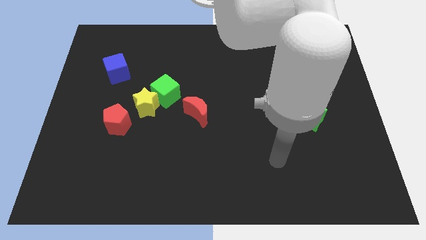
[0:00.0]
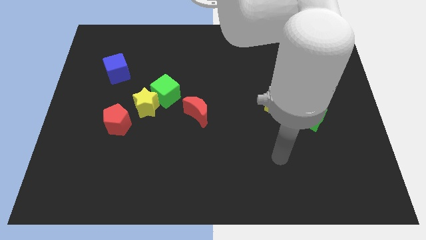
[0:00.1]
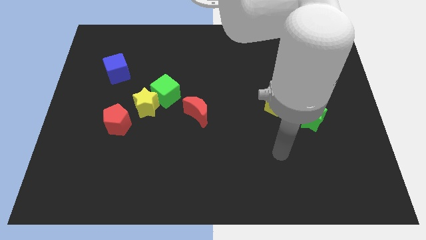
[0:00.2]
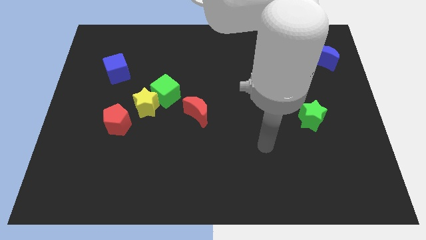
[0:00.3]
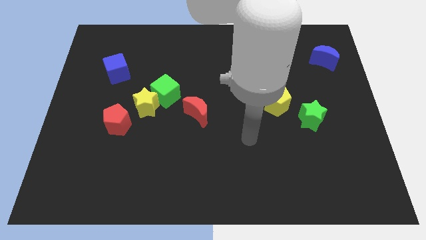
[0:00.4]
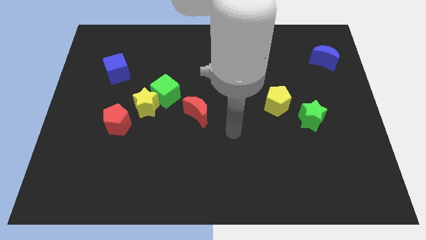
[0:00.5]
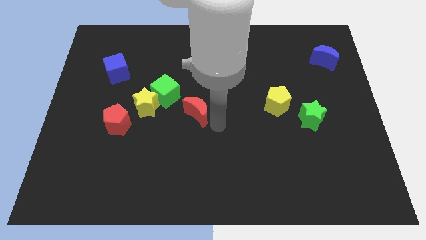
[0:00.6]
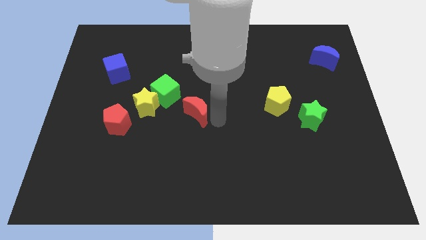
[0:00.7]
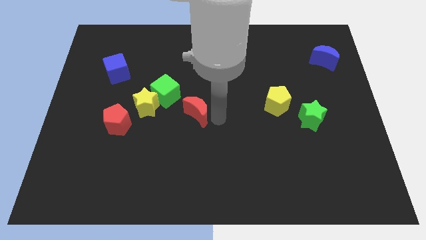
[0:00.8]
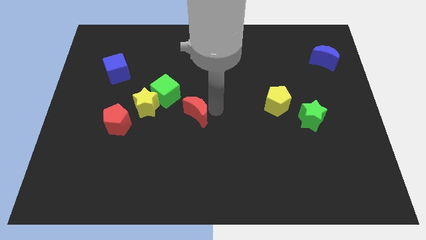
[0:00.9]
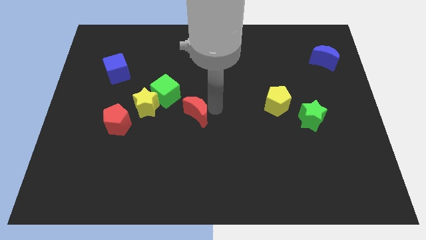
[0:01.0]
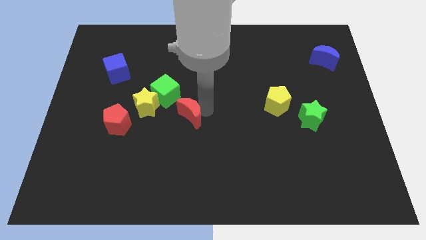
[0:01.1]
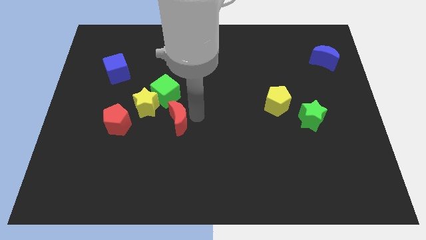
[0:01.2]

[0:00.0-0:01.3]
go and touch the red crescent

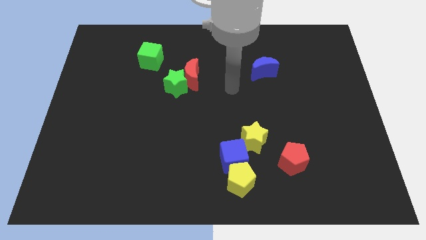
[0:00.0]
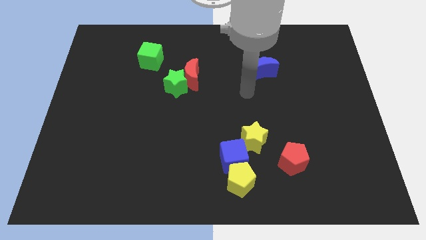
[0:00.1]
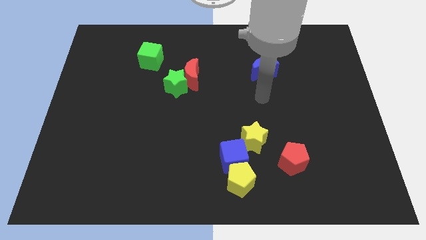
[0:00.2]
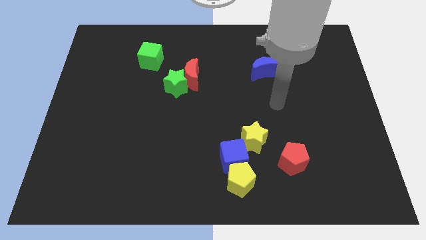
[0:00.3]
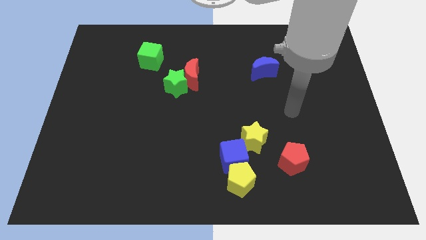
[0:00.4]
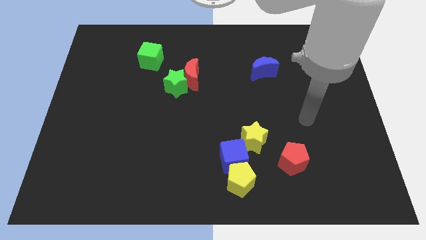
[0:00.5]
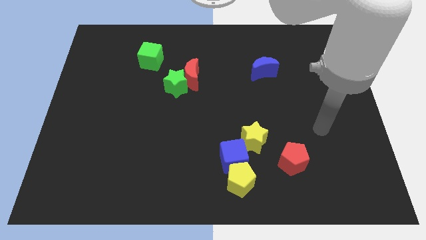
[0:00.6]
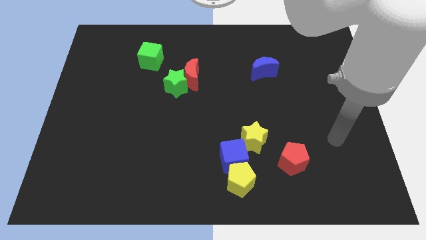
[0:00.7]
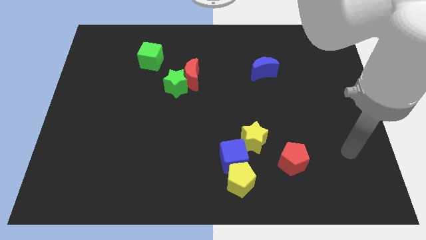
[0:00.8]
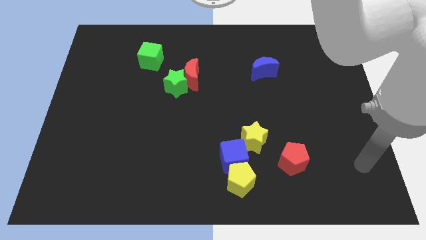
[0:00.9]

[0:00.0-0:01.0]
move arm away from blue moon

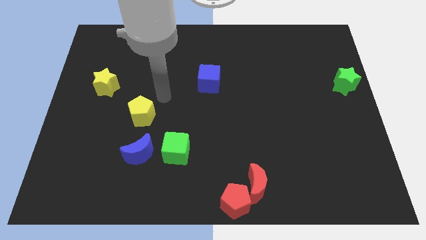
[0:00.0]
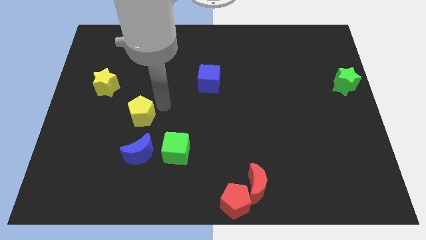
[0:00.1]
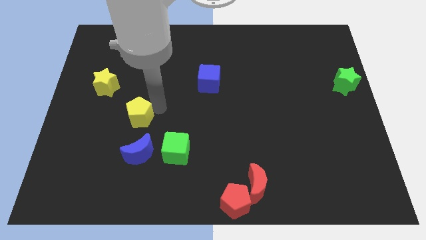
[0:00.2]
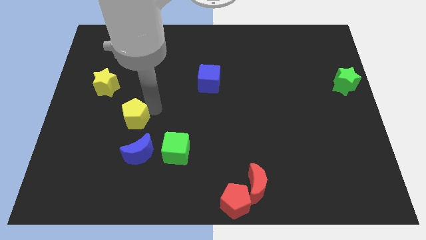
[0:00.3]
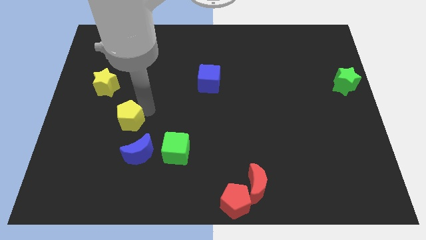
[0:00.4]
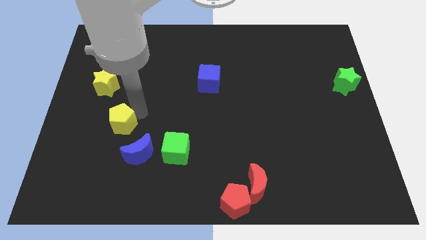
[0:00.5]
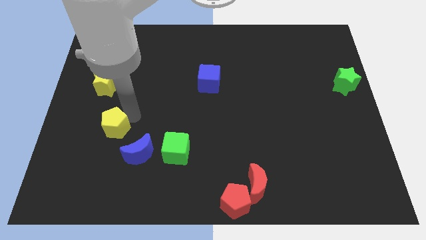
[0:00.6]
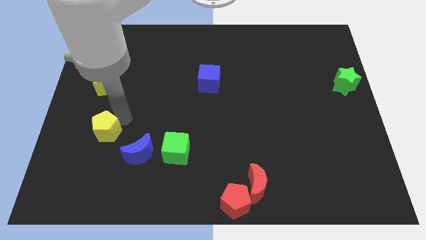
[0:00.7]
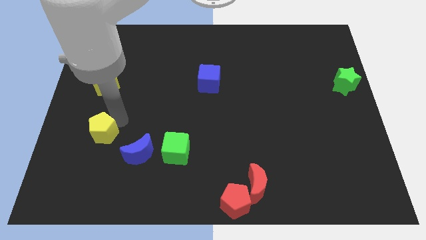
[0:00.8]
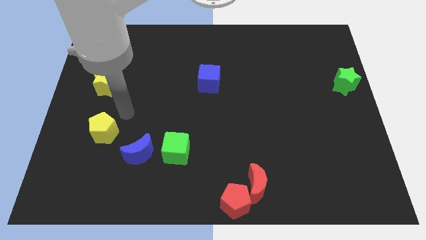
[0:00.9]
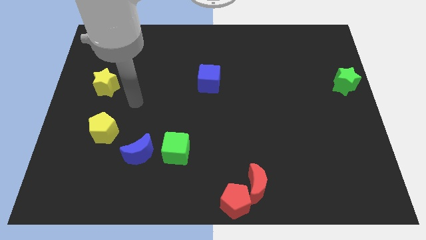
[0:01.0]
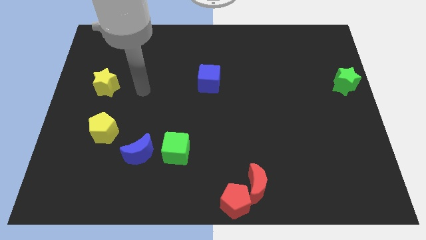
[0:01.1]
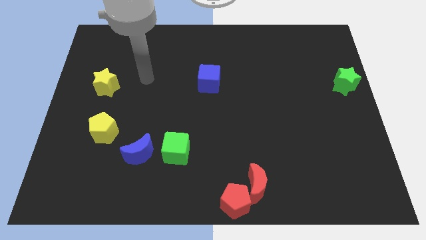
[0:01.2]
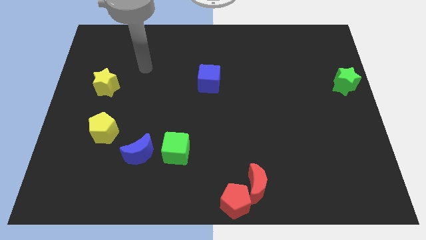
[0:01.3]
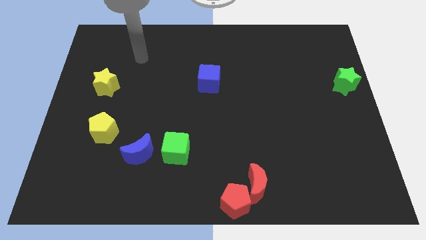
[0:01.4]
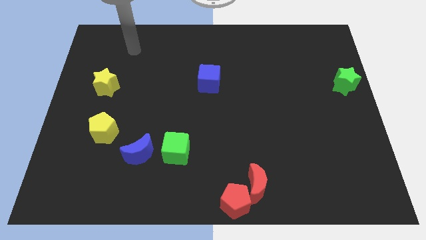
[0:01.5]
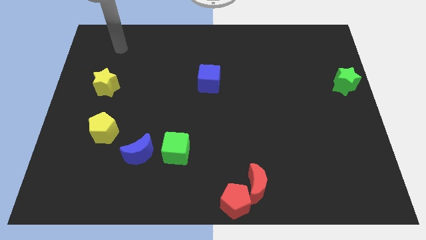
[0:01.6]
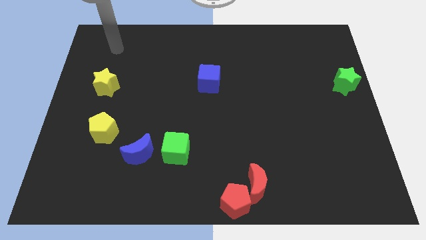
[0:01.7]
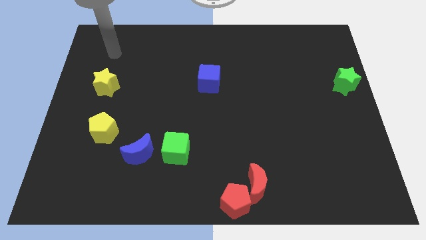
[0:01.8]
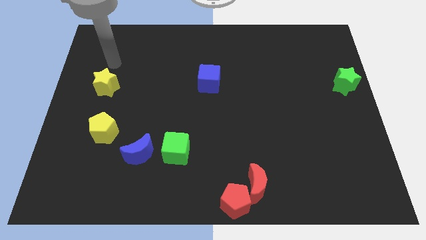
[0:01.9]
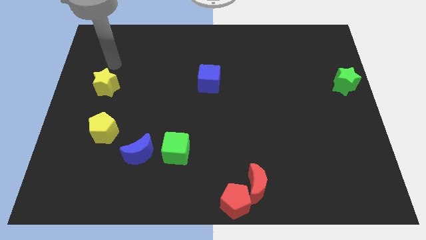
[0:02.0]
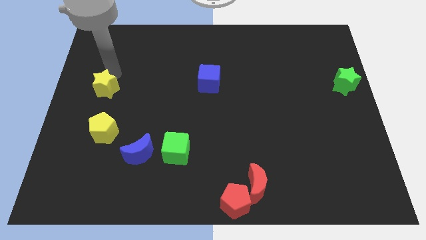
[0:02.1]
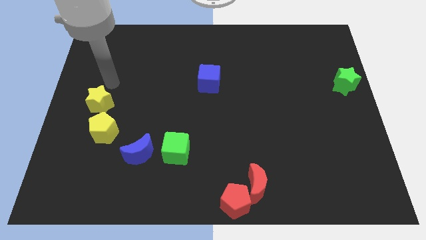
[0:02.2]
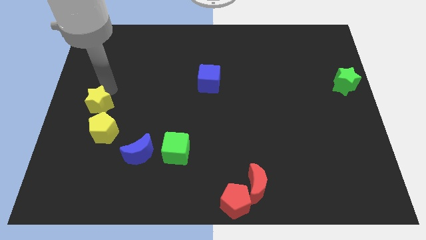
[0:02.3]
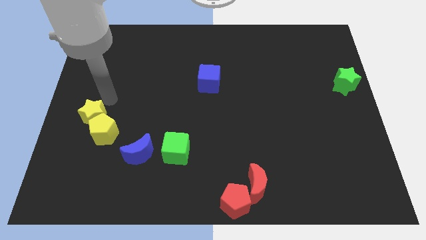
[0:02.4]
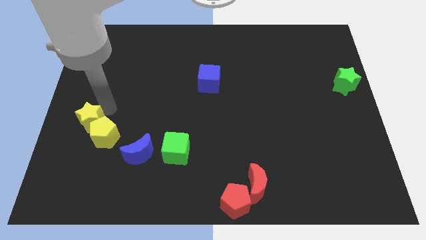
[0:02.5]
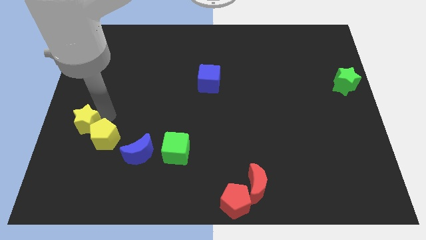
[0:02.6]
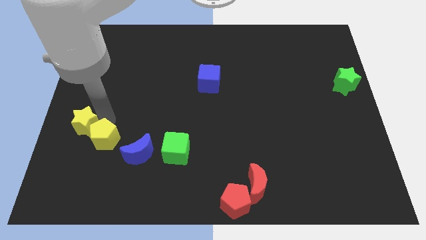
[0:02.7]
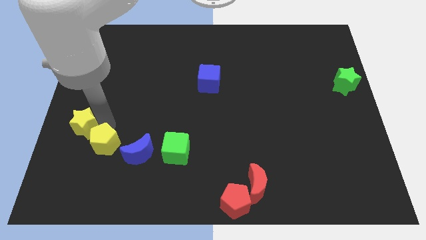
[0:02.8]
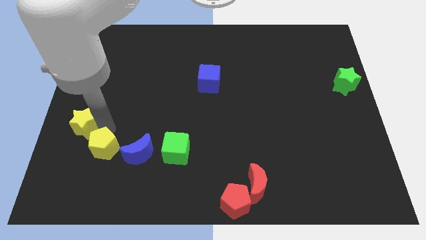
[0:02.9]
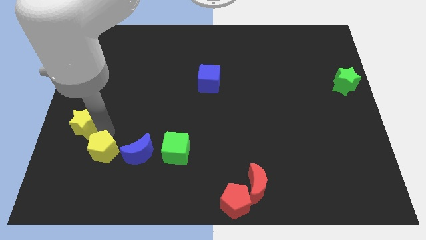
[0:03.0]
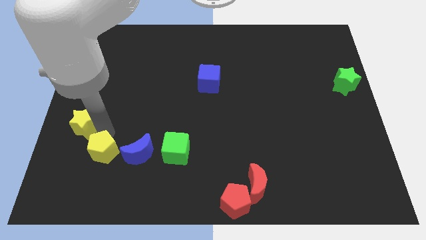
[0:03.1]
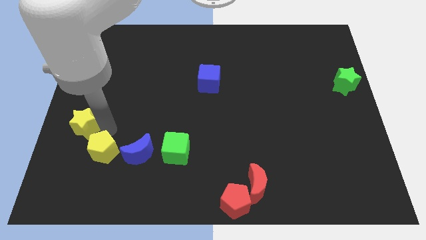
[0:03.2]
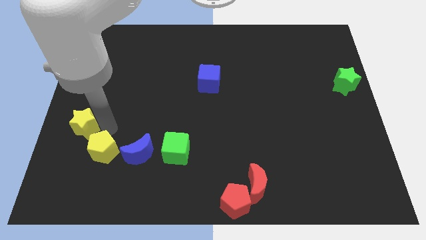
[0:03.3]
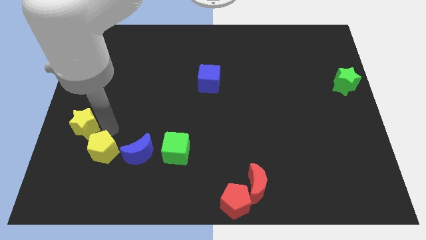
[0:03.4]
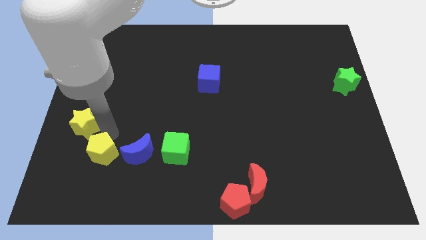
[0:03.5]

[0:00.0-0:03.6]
place the yellow pentagon left to the blue moon

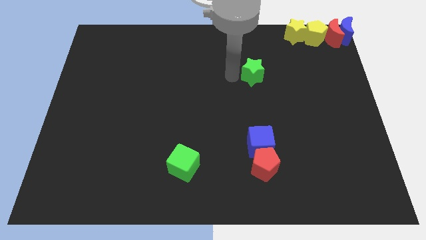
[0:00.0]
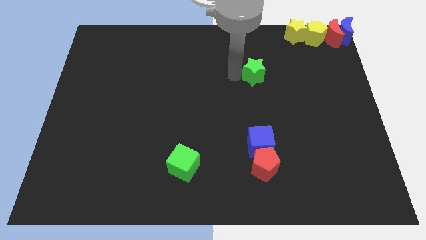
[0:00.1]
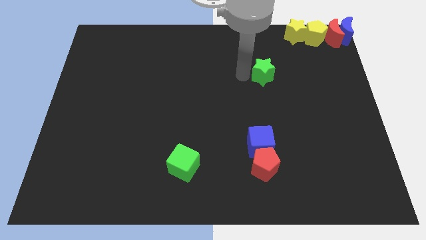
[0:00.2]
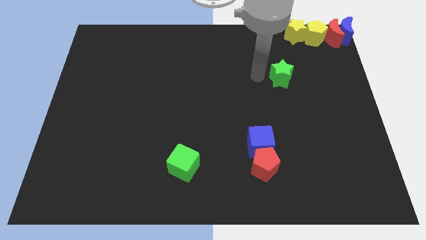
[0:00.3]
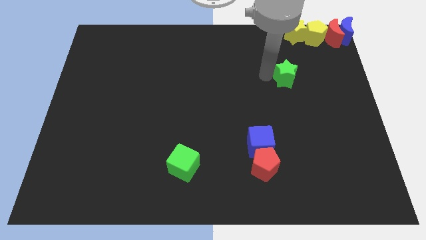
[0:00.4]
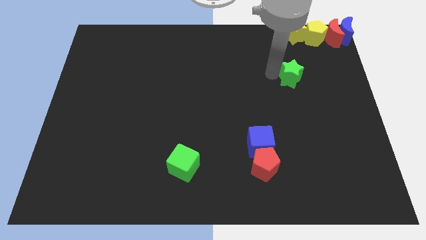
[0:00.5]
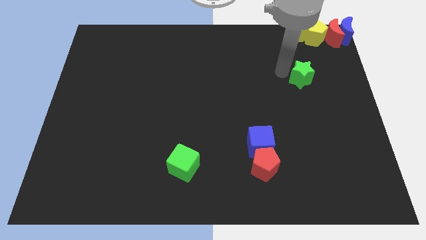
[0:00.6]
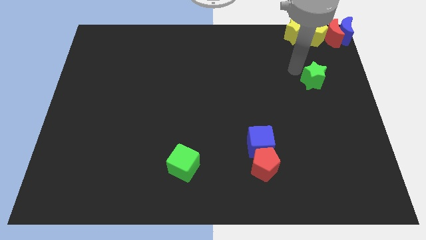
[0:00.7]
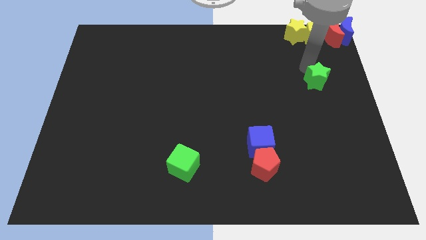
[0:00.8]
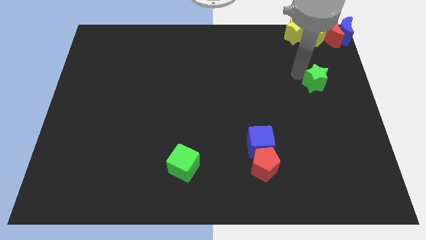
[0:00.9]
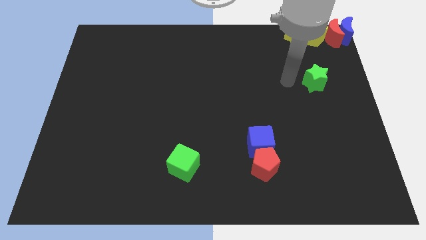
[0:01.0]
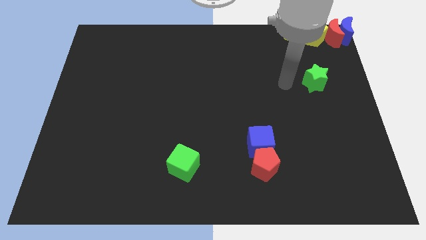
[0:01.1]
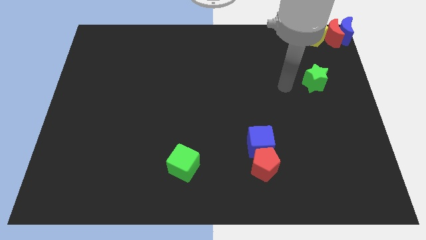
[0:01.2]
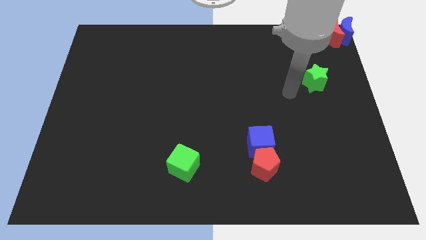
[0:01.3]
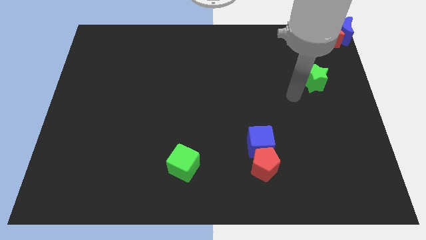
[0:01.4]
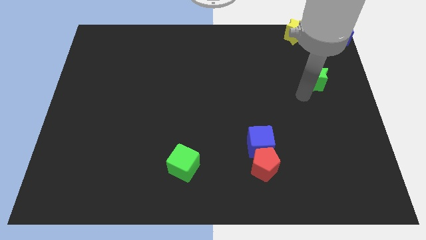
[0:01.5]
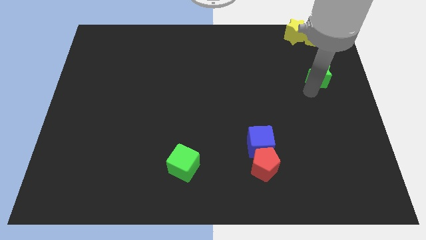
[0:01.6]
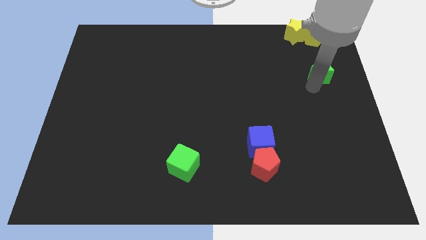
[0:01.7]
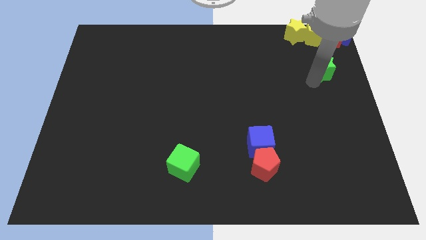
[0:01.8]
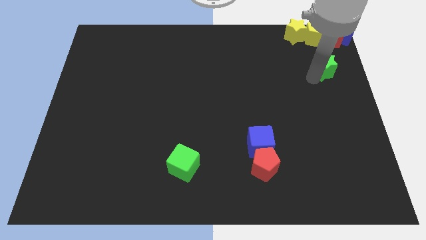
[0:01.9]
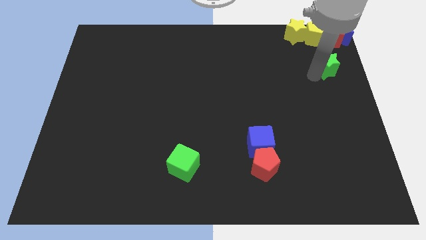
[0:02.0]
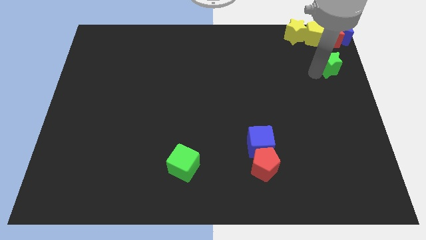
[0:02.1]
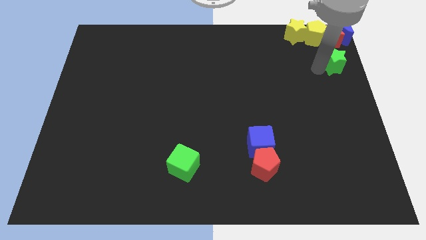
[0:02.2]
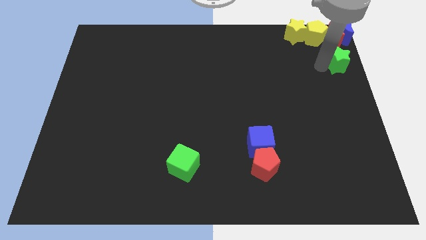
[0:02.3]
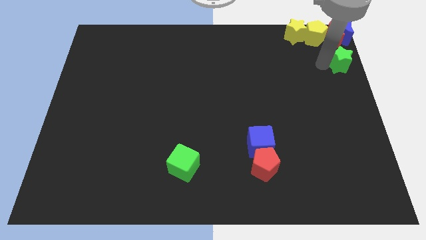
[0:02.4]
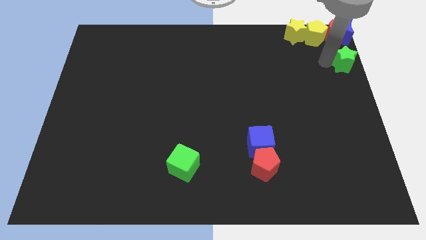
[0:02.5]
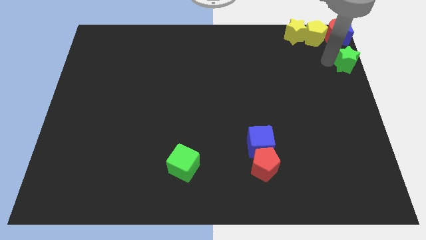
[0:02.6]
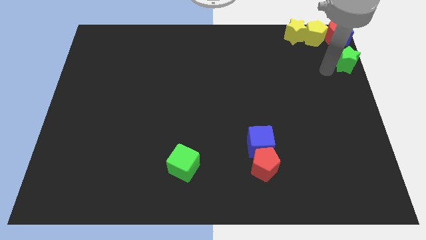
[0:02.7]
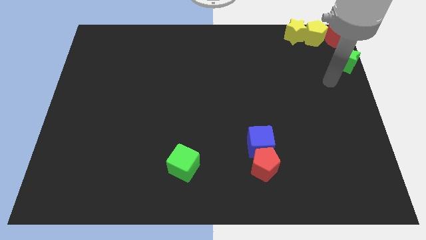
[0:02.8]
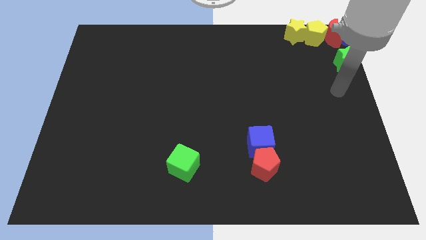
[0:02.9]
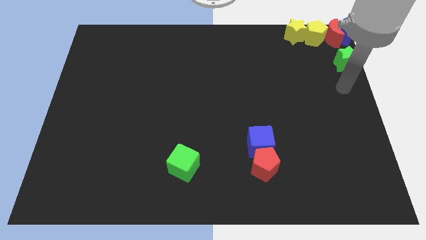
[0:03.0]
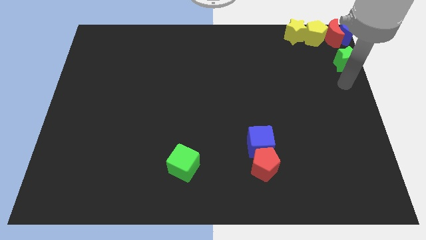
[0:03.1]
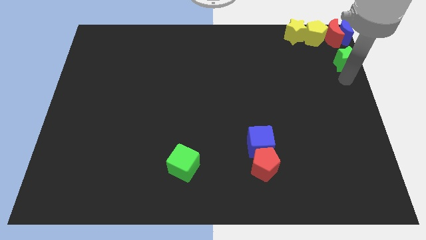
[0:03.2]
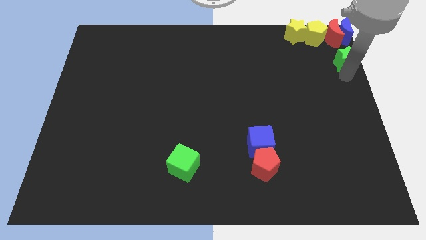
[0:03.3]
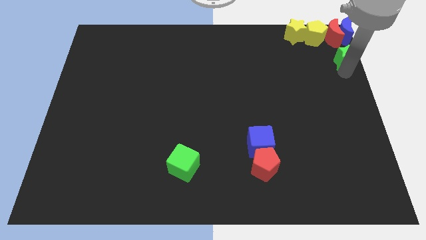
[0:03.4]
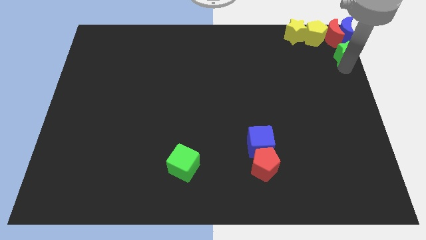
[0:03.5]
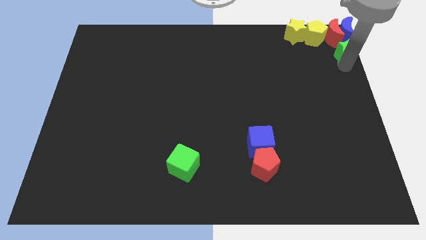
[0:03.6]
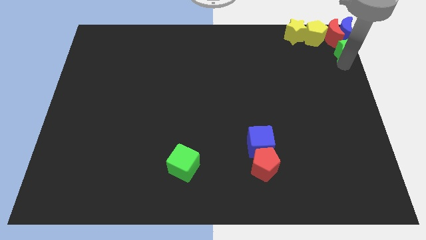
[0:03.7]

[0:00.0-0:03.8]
move the green star underneath the red and blue crescents
